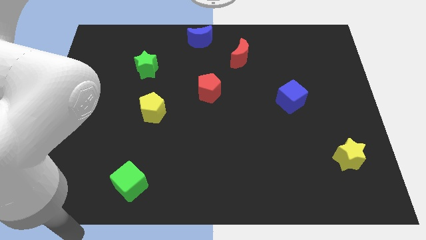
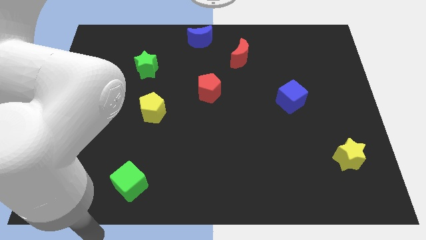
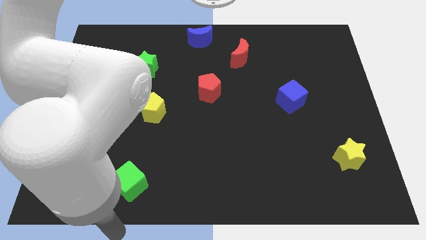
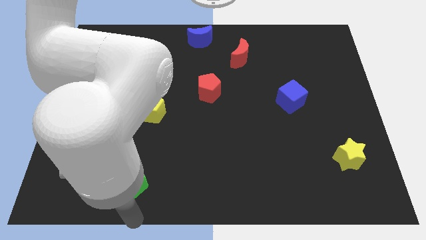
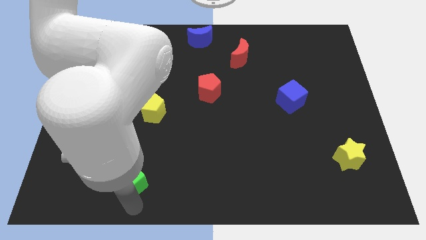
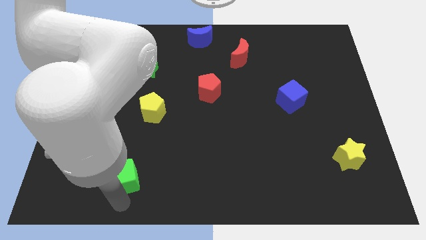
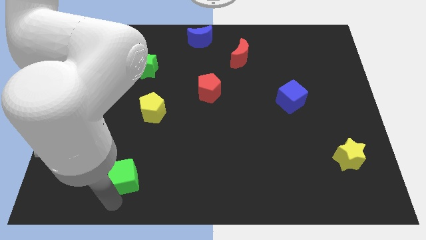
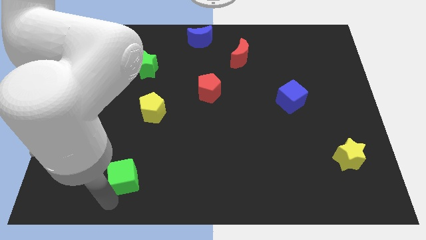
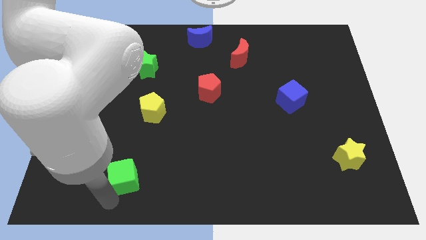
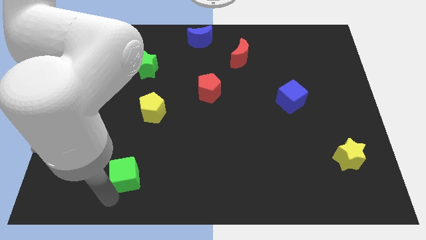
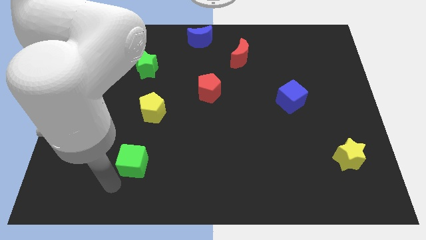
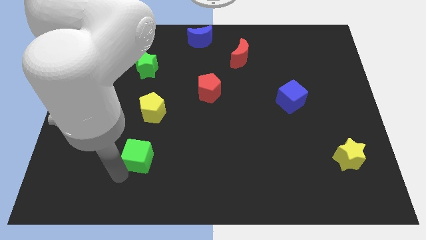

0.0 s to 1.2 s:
place the green cube to the center

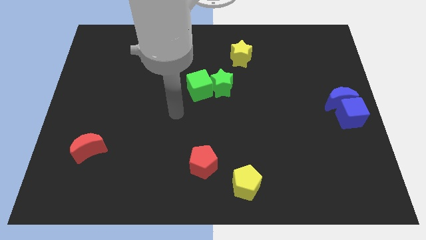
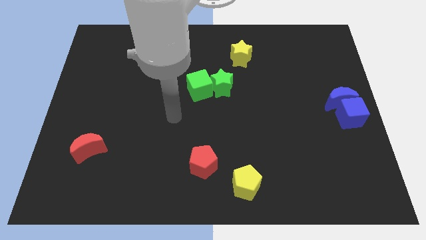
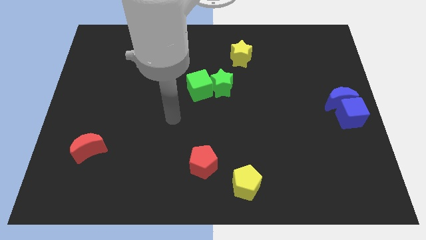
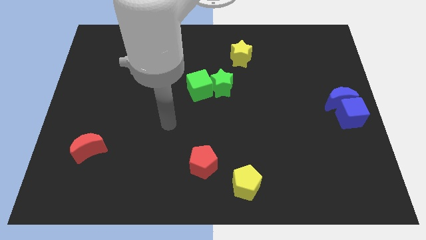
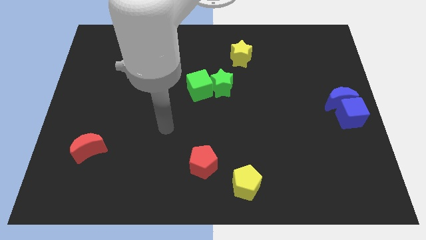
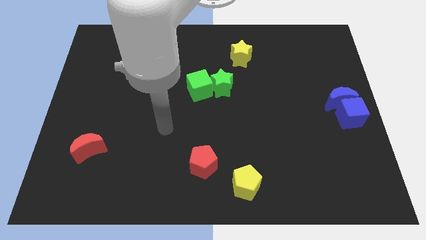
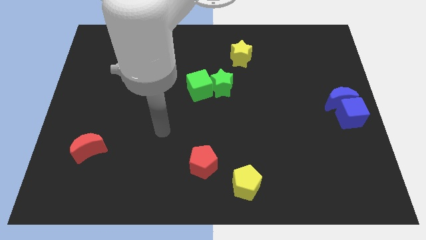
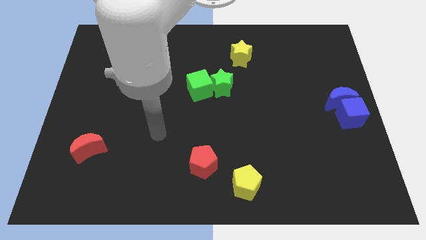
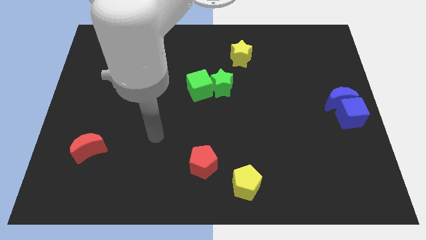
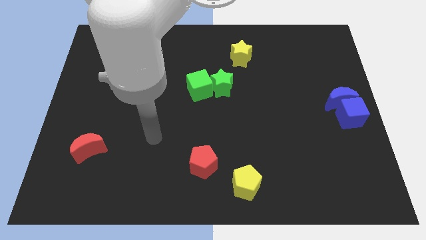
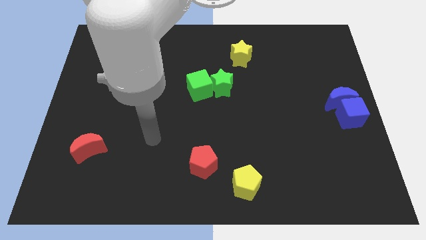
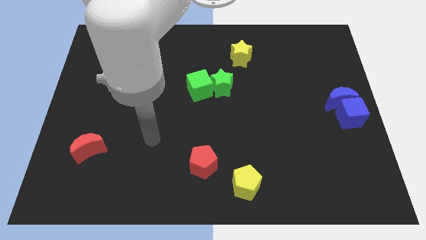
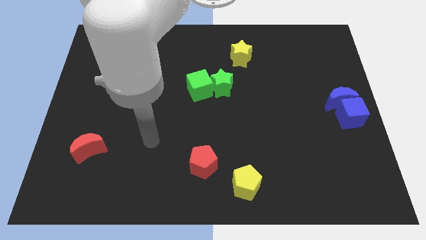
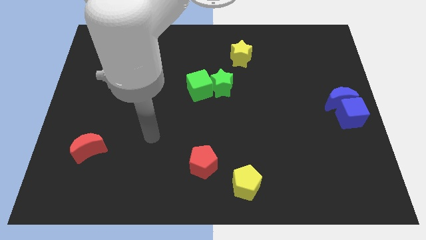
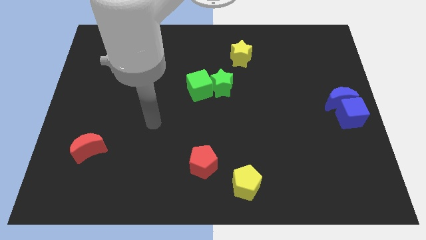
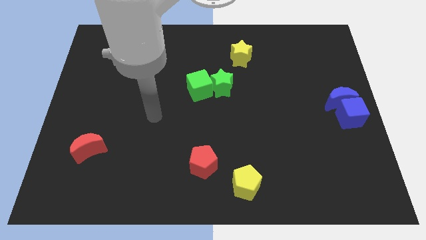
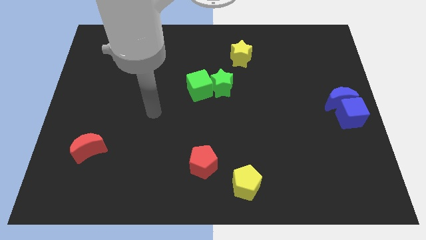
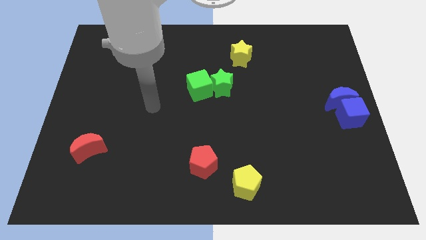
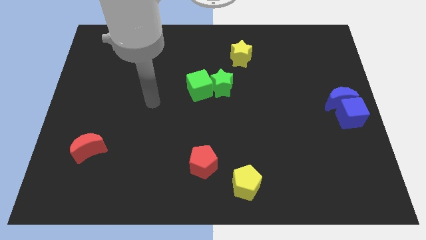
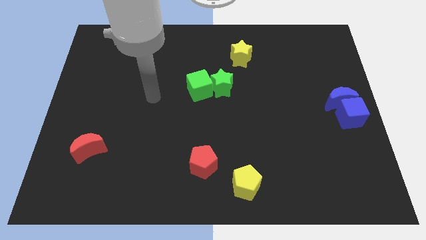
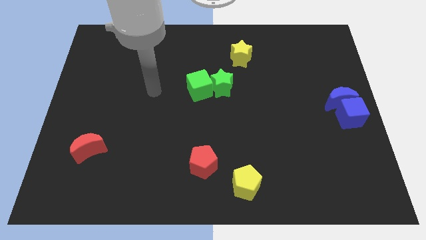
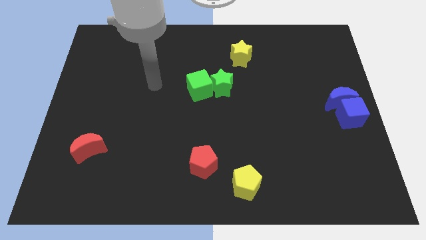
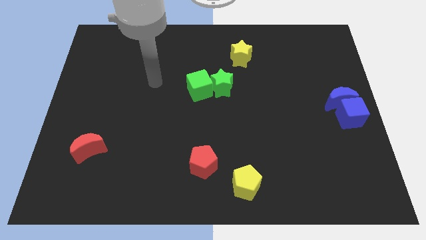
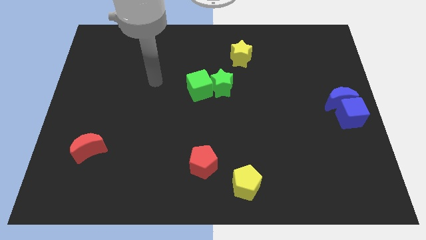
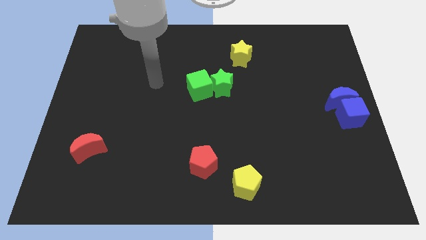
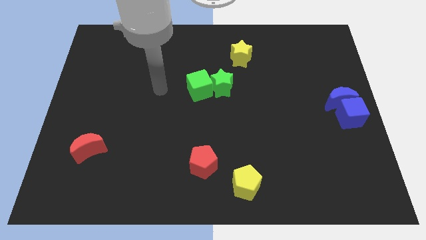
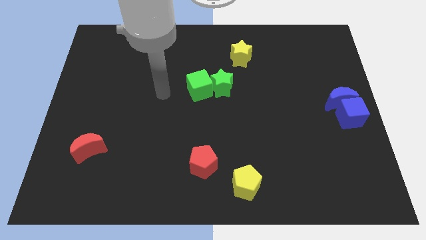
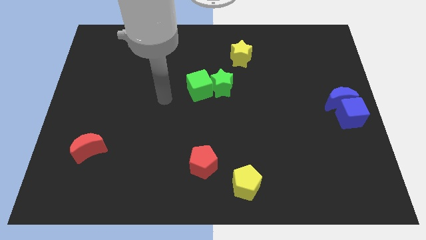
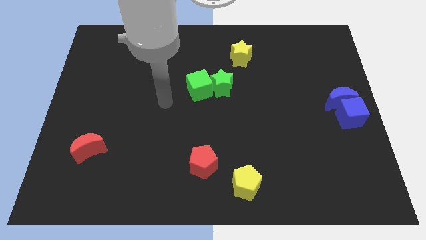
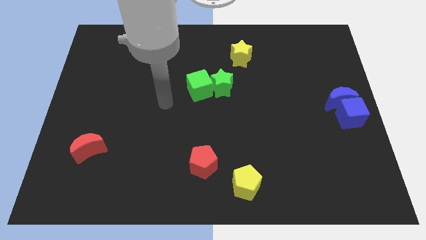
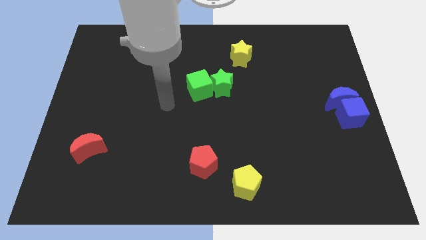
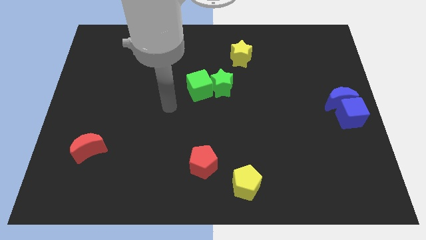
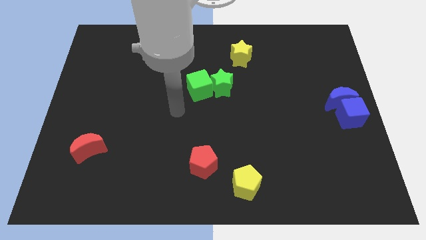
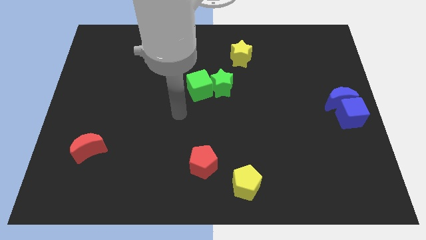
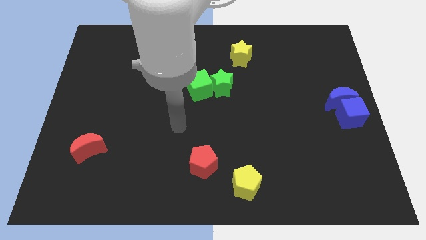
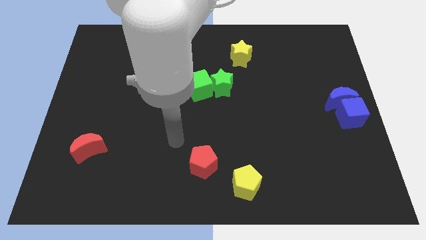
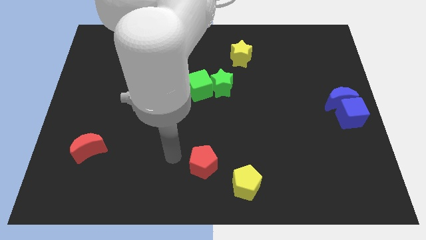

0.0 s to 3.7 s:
move your arm towards the red pentagon

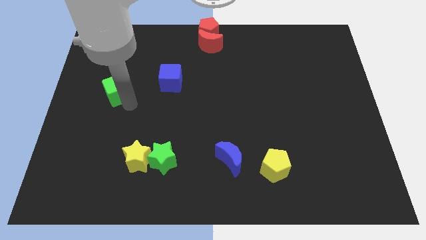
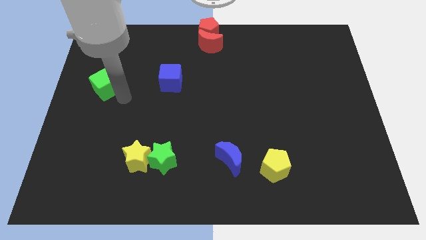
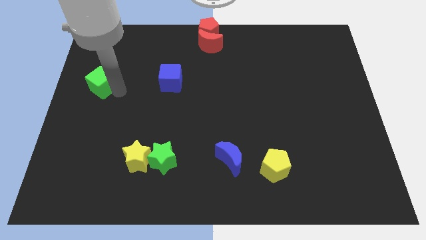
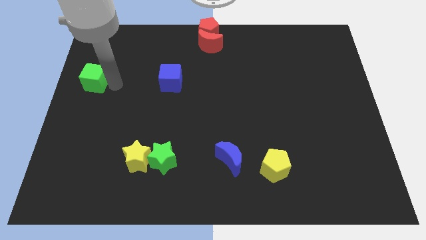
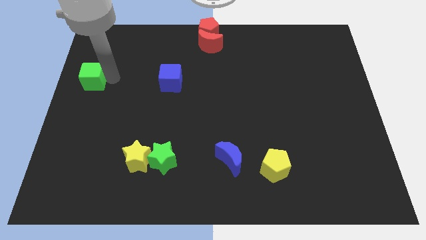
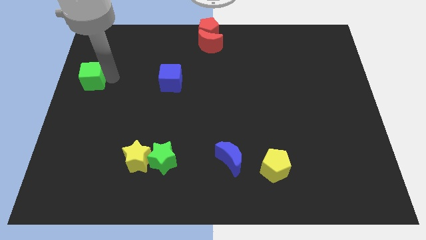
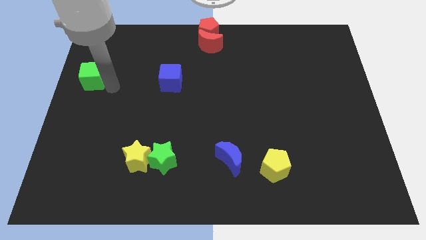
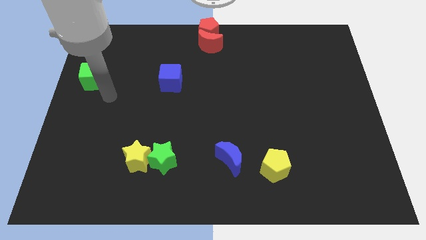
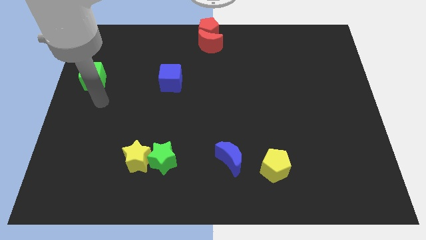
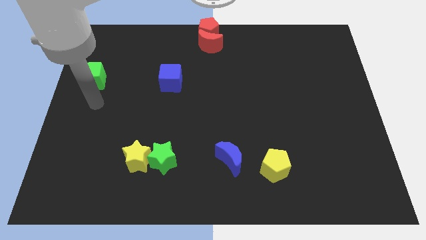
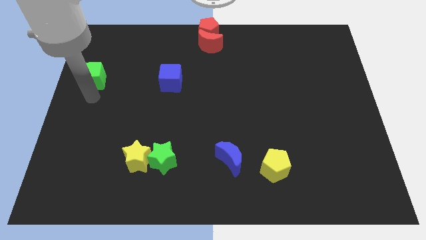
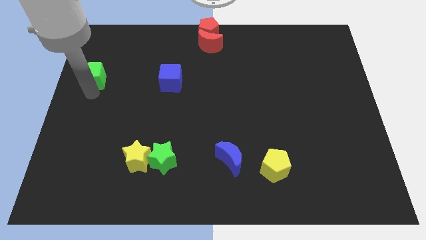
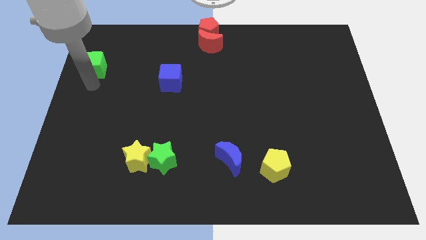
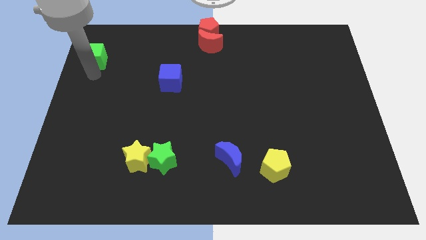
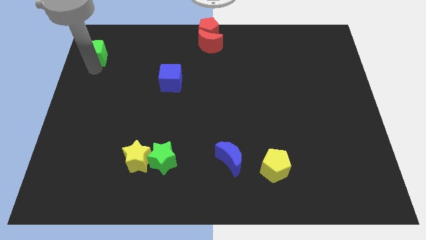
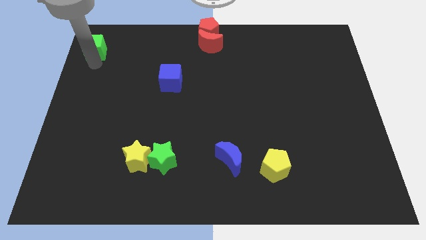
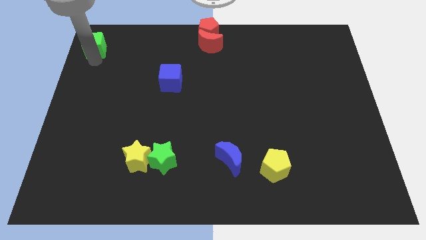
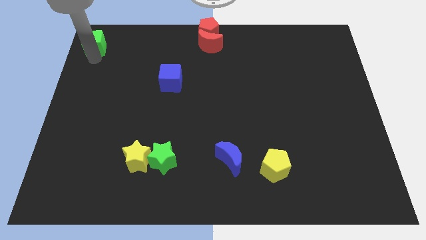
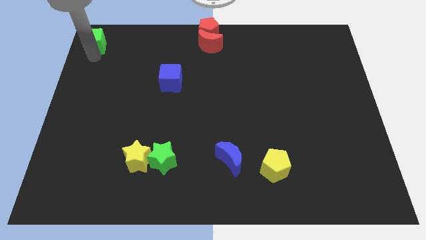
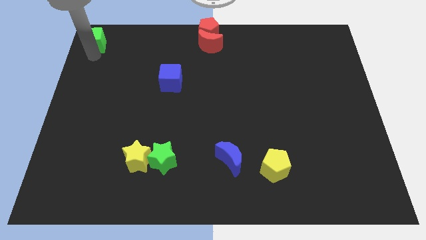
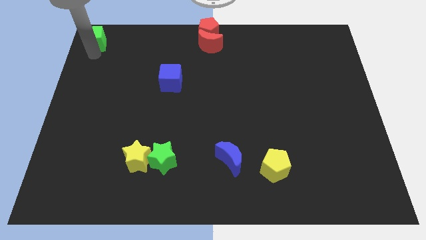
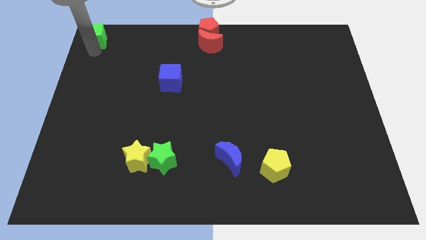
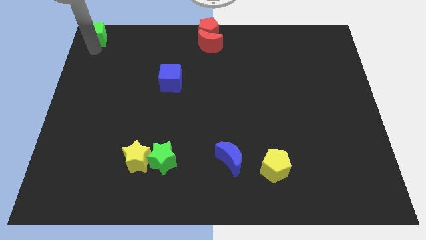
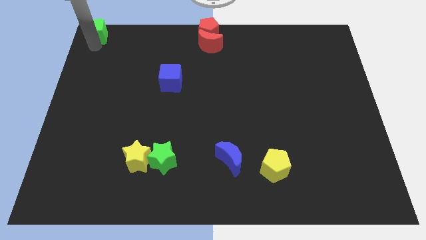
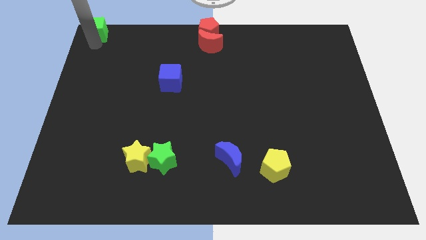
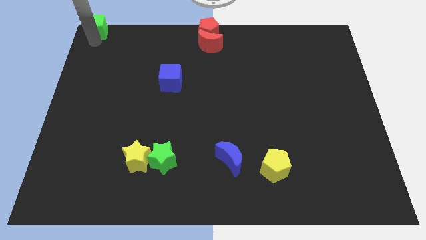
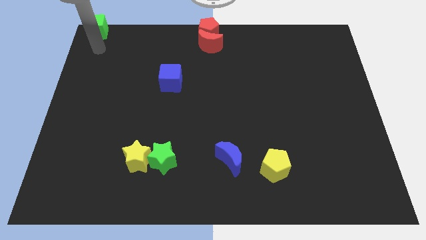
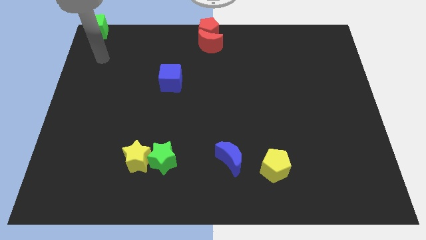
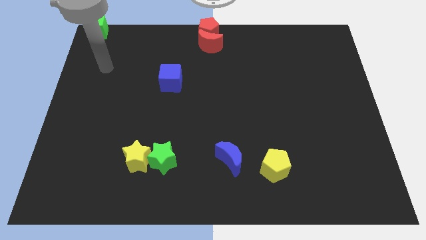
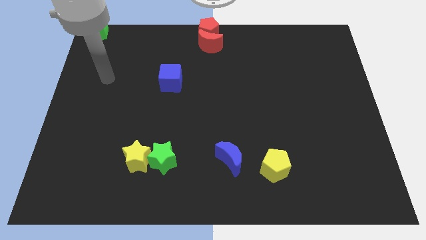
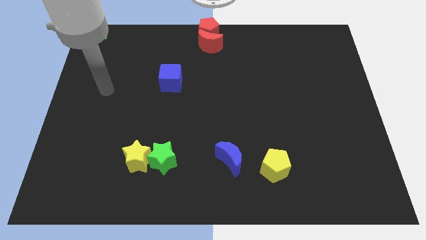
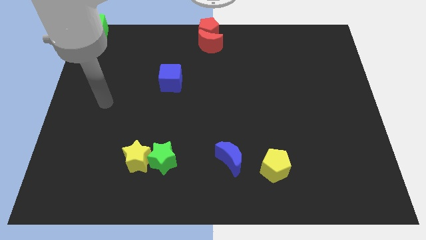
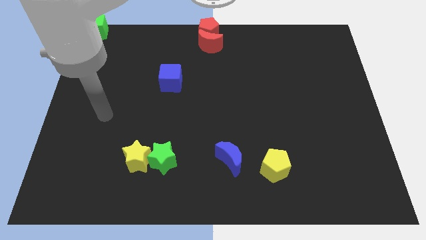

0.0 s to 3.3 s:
place green cube parallel left to red pentagon

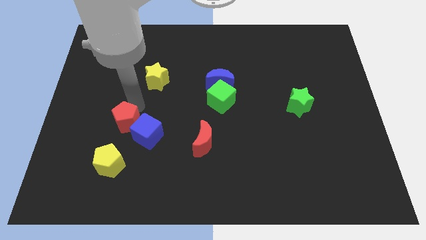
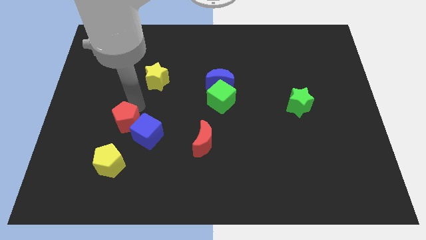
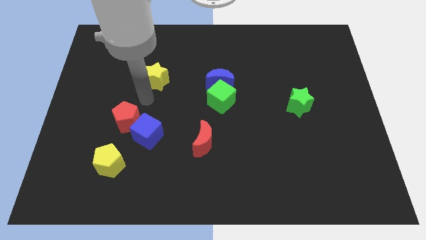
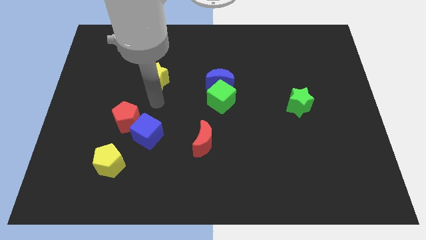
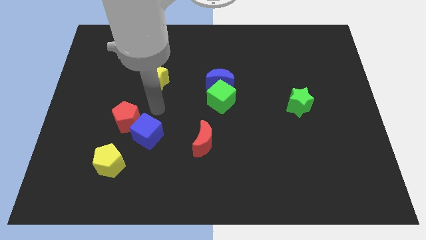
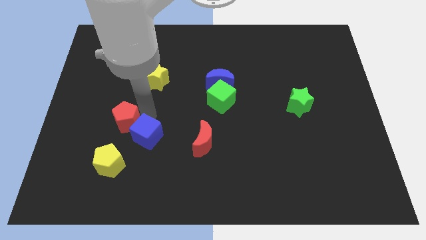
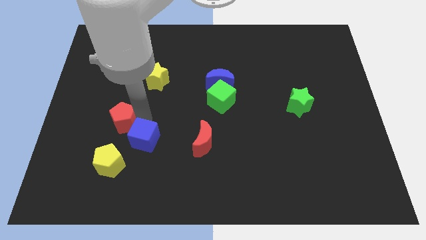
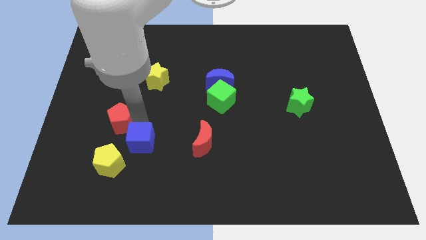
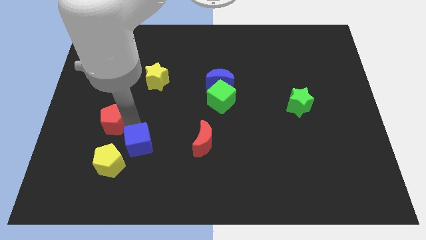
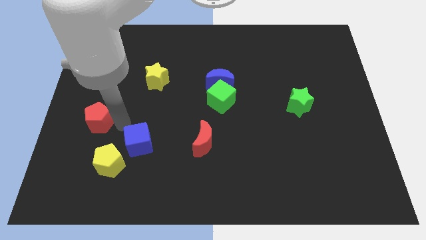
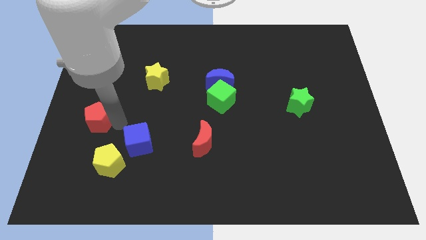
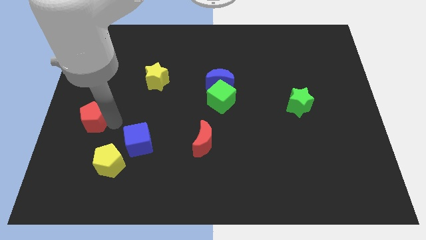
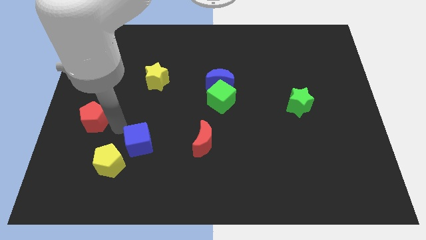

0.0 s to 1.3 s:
place the red pentagon diagonally to the yellow pentagon
